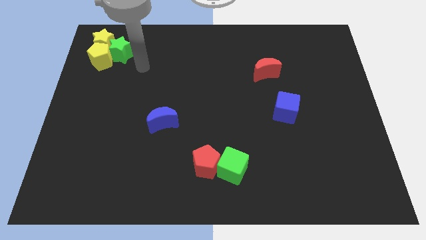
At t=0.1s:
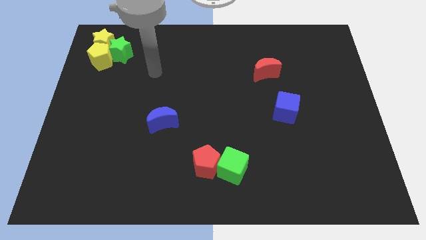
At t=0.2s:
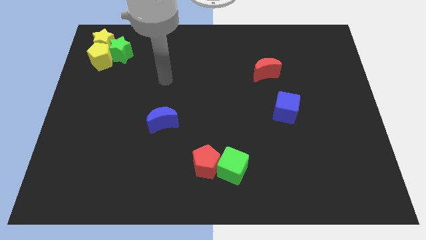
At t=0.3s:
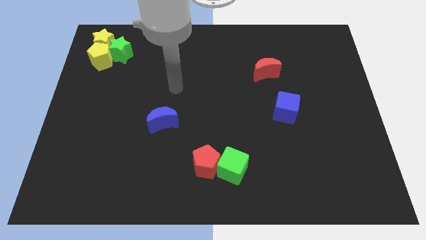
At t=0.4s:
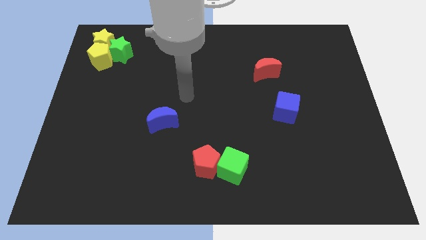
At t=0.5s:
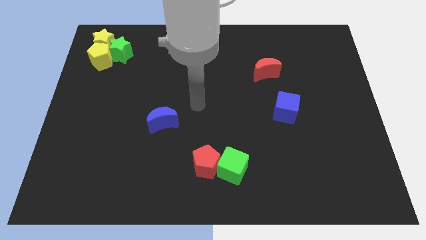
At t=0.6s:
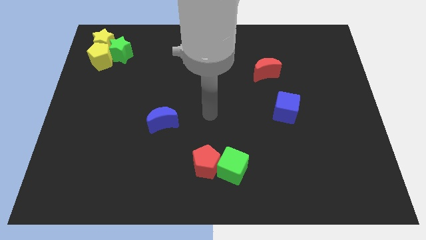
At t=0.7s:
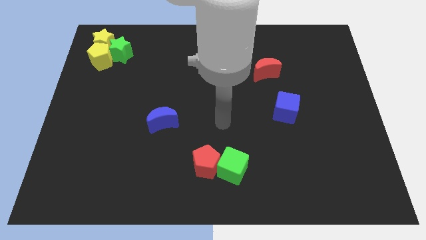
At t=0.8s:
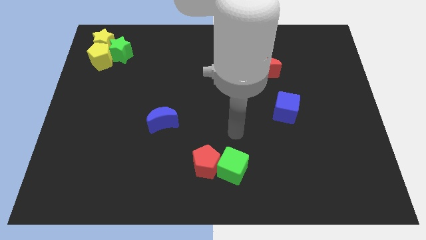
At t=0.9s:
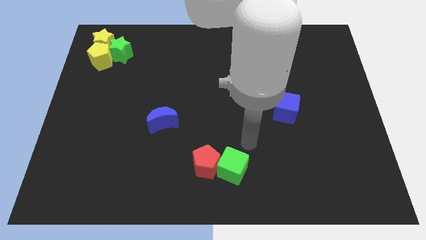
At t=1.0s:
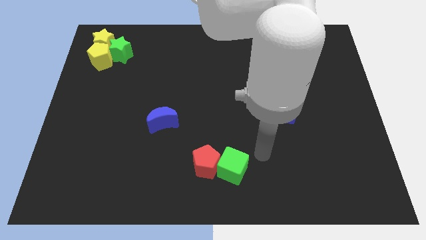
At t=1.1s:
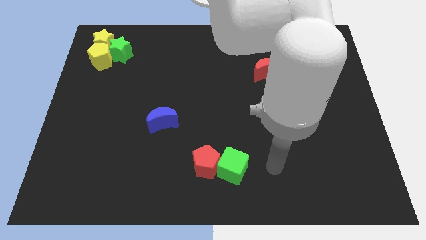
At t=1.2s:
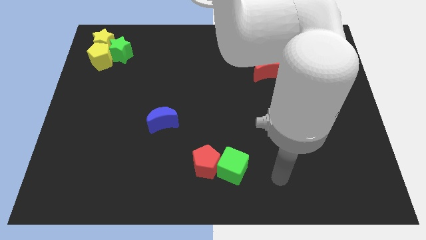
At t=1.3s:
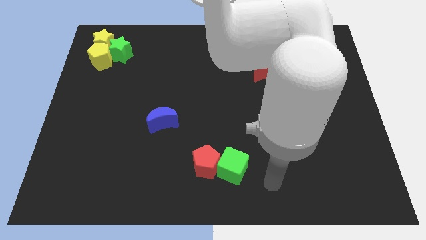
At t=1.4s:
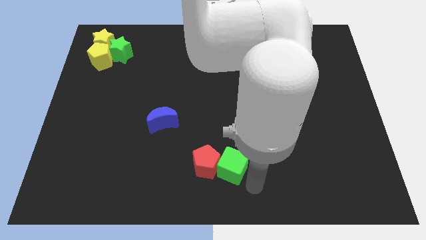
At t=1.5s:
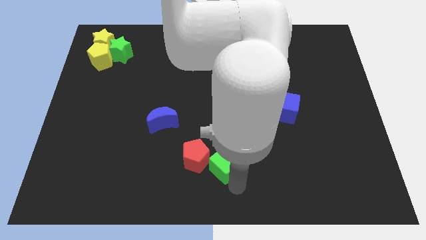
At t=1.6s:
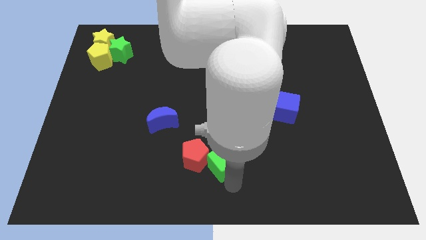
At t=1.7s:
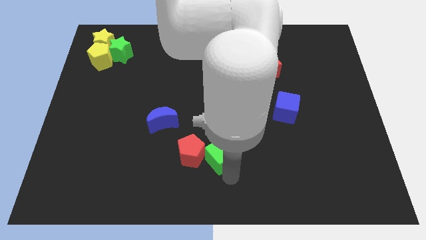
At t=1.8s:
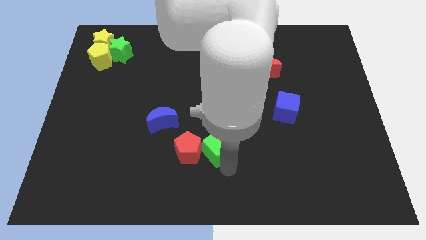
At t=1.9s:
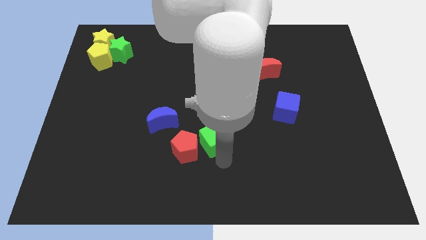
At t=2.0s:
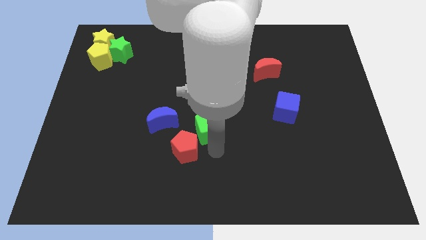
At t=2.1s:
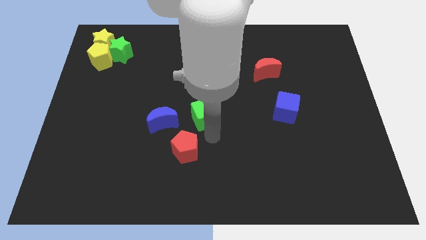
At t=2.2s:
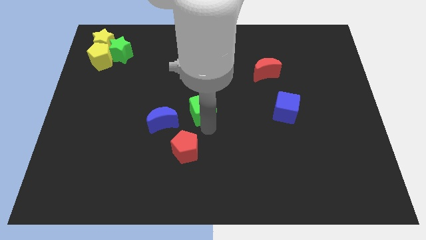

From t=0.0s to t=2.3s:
move the green cube to the right of the blue moon

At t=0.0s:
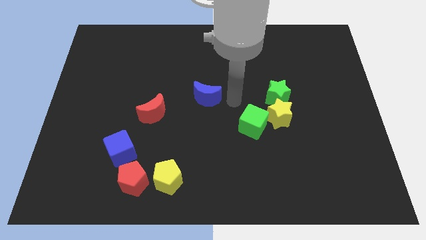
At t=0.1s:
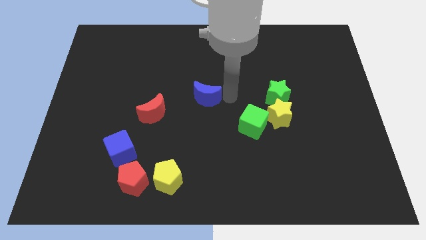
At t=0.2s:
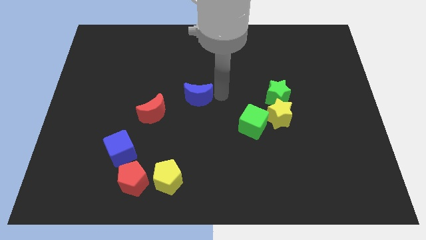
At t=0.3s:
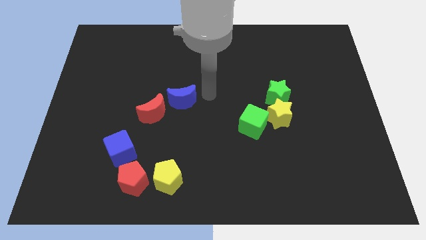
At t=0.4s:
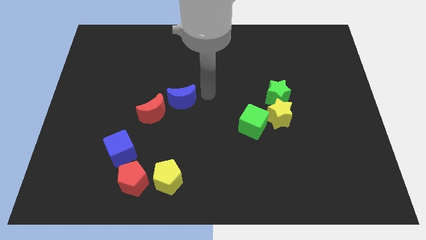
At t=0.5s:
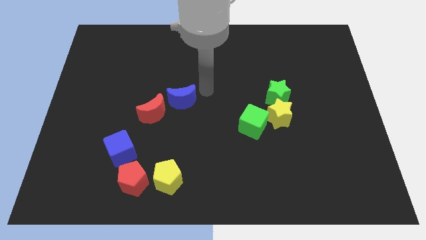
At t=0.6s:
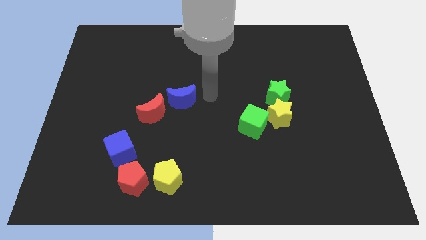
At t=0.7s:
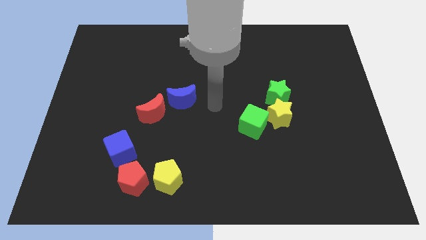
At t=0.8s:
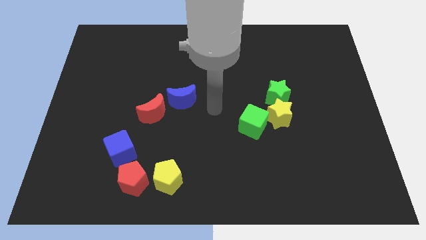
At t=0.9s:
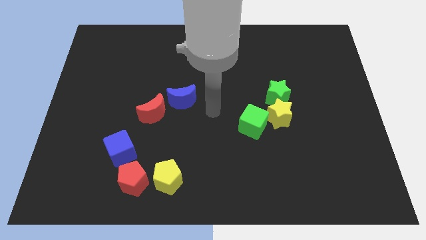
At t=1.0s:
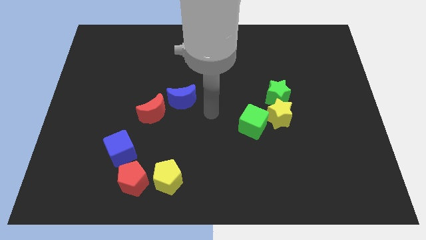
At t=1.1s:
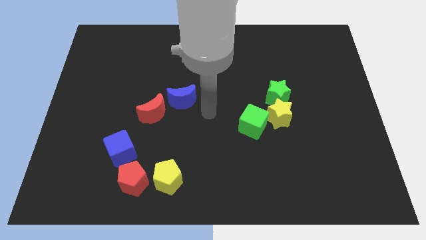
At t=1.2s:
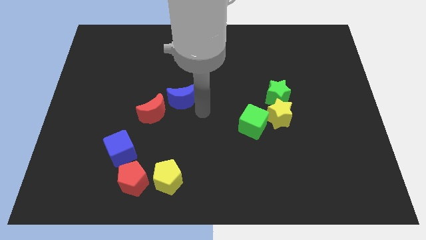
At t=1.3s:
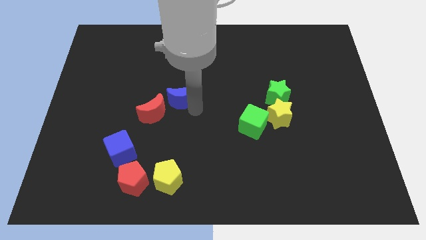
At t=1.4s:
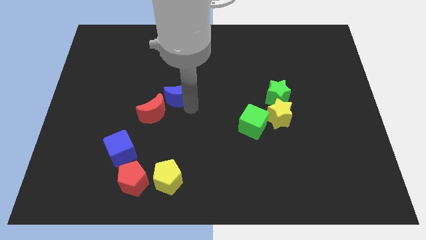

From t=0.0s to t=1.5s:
place blue cube to the right of red crescent

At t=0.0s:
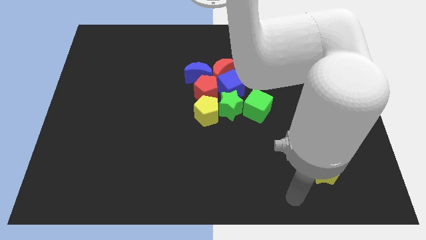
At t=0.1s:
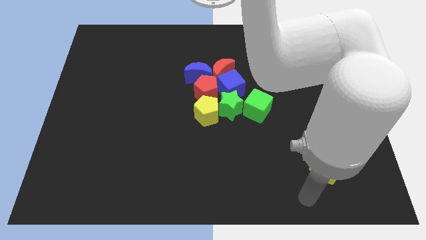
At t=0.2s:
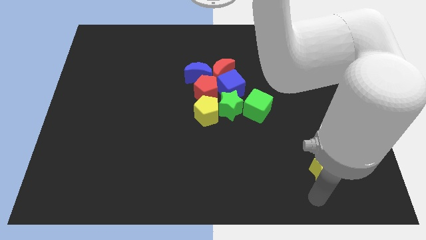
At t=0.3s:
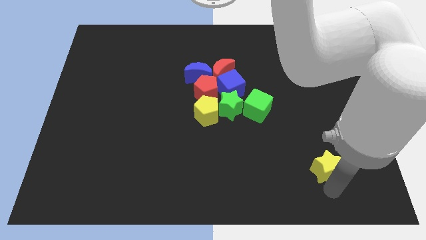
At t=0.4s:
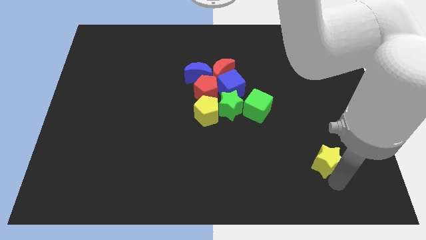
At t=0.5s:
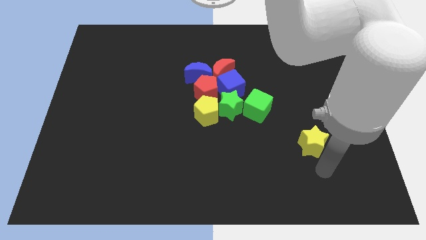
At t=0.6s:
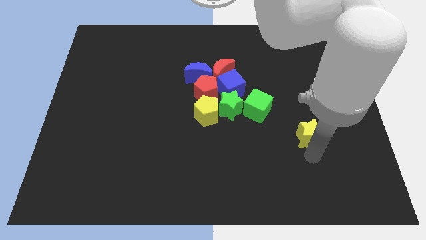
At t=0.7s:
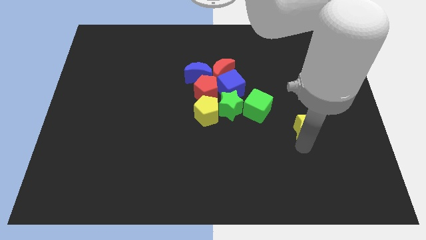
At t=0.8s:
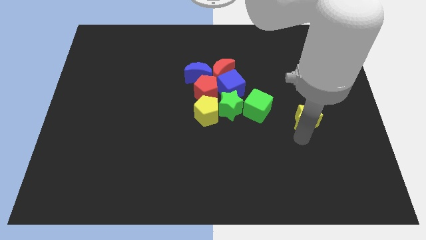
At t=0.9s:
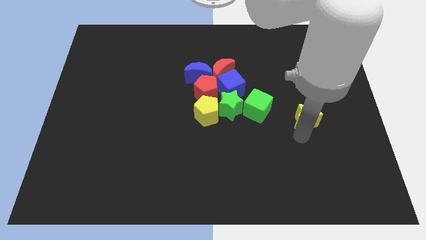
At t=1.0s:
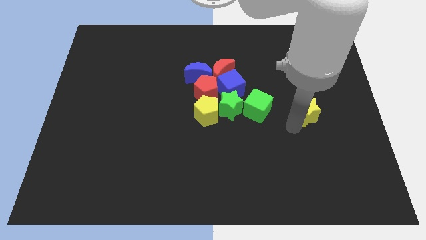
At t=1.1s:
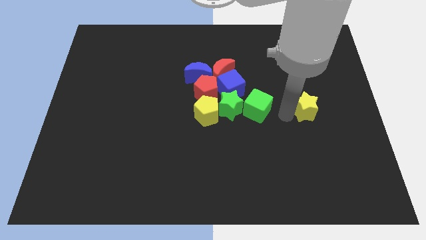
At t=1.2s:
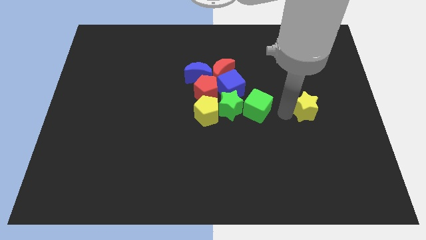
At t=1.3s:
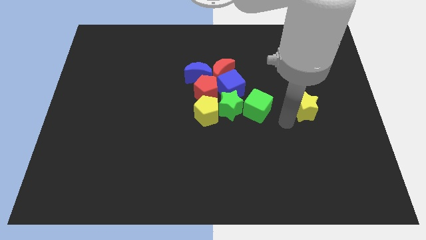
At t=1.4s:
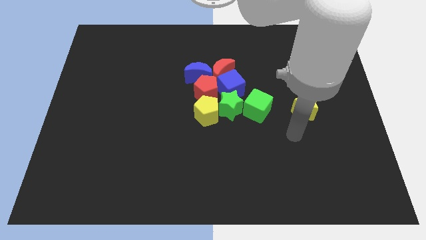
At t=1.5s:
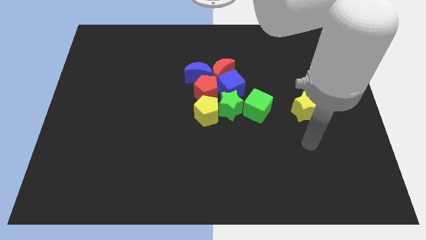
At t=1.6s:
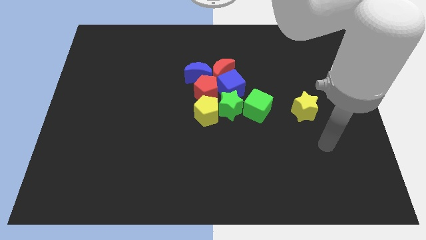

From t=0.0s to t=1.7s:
place the yellow star parallel to the green cube

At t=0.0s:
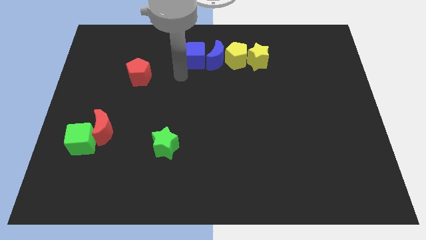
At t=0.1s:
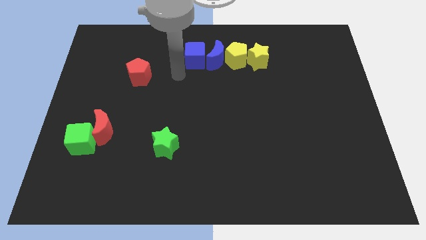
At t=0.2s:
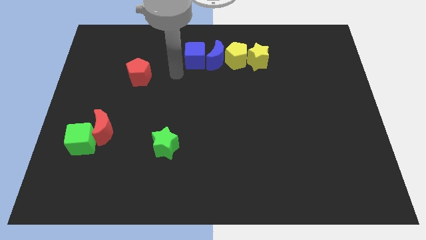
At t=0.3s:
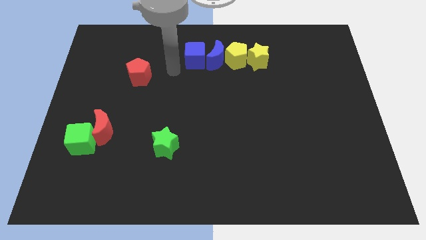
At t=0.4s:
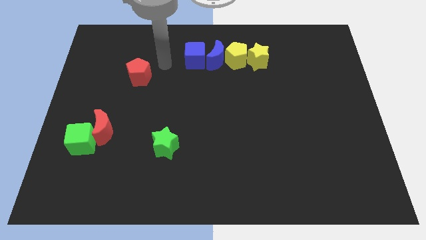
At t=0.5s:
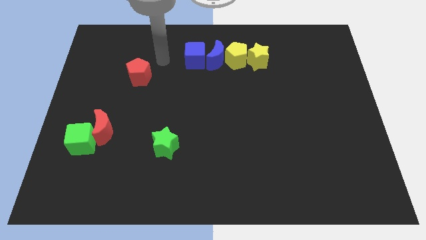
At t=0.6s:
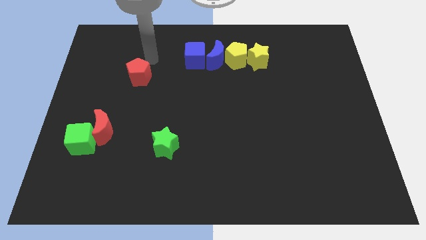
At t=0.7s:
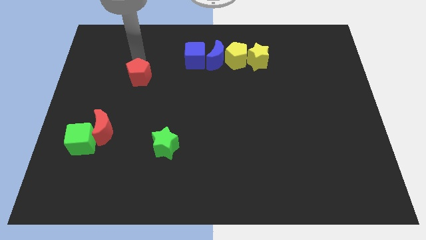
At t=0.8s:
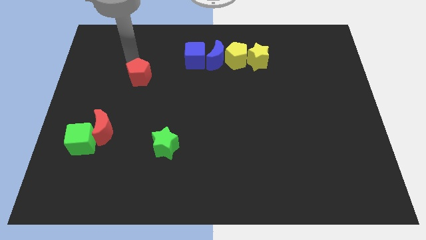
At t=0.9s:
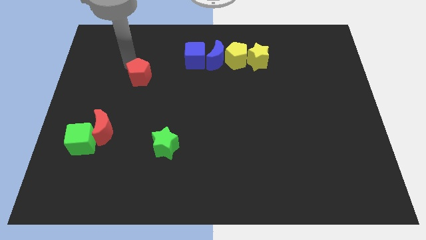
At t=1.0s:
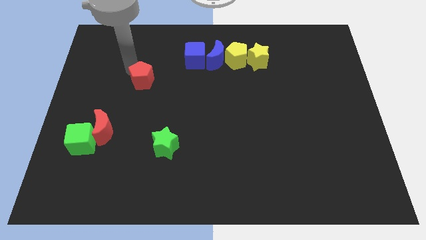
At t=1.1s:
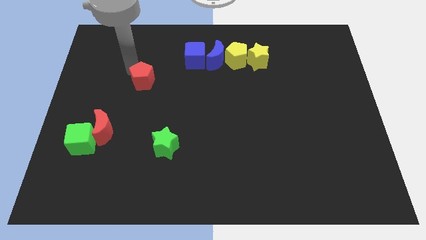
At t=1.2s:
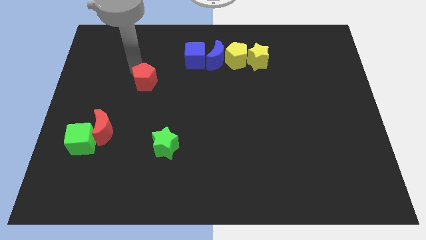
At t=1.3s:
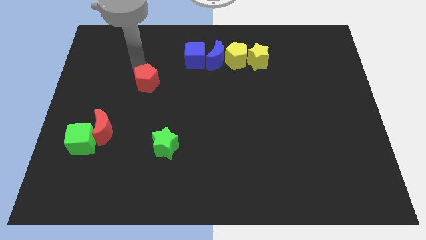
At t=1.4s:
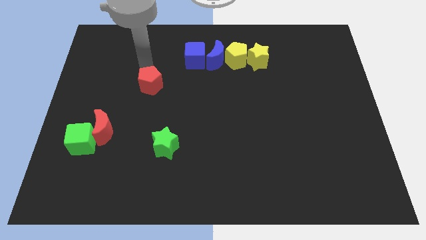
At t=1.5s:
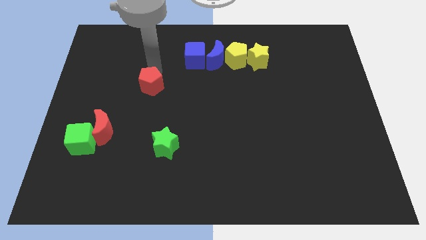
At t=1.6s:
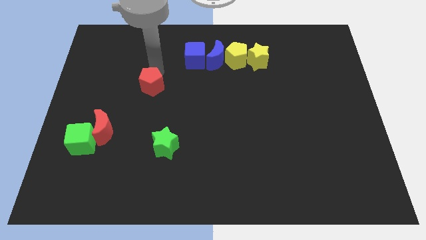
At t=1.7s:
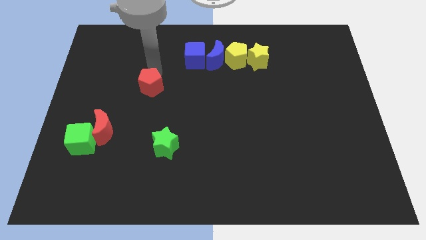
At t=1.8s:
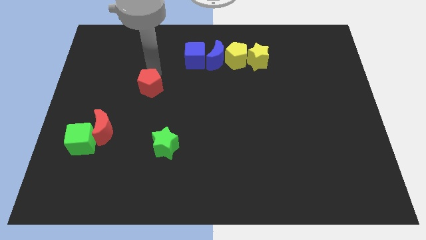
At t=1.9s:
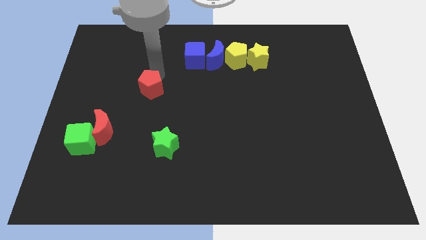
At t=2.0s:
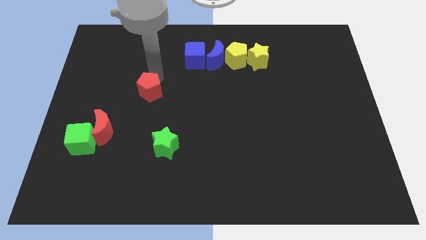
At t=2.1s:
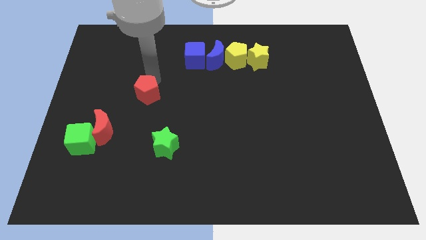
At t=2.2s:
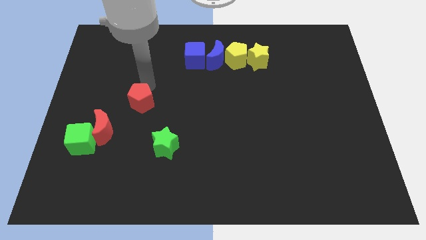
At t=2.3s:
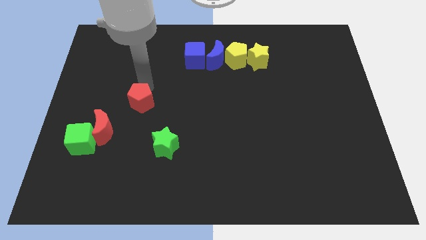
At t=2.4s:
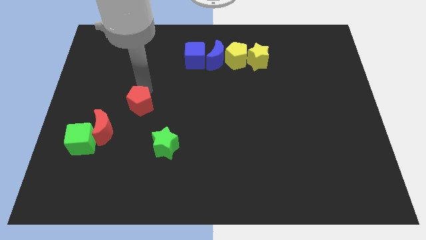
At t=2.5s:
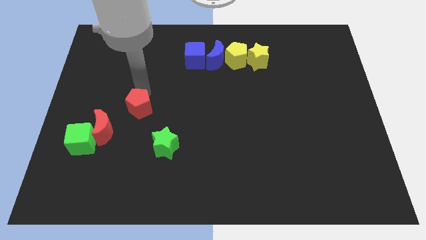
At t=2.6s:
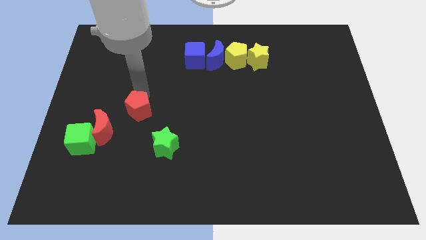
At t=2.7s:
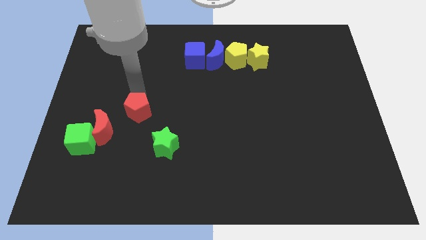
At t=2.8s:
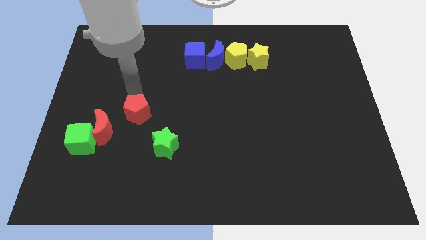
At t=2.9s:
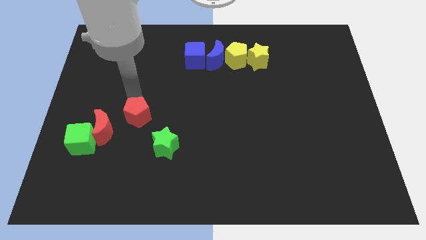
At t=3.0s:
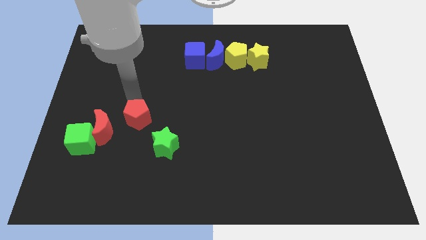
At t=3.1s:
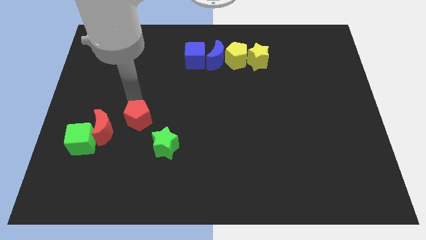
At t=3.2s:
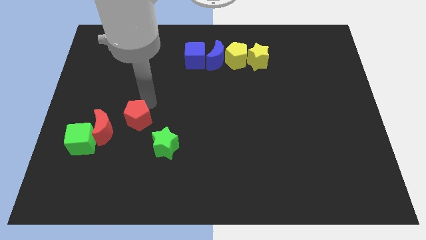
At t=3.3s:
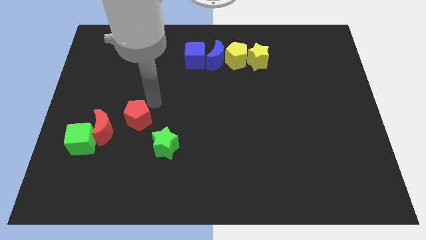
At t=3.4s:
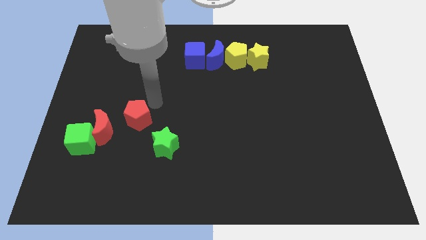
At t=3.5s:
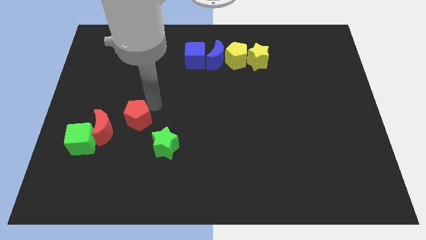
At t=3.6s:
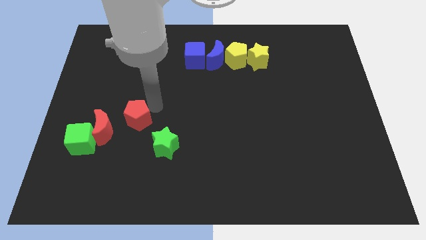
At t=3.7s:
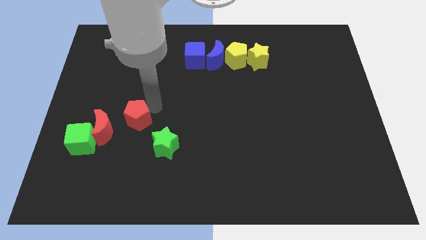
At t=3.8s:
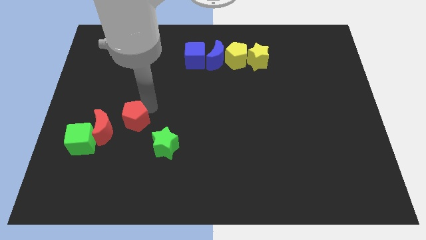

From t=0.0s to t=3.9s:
place the red pentagon right to the red moon
